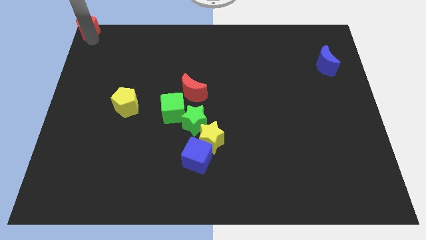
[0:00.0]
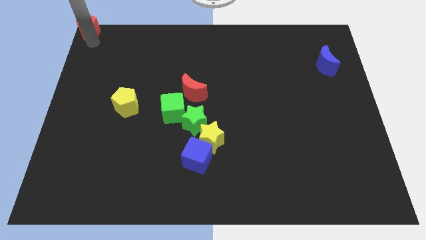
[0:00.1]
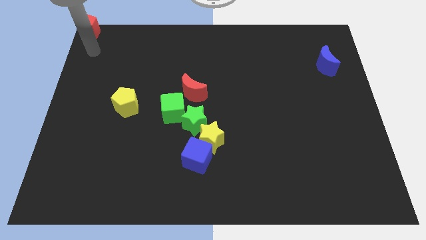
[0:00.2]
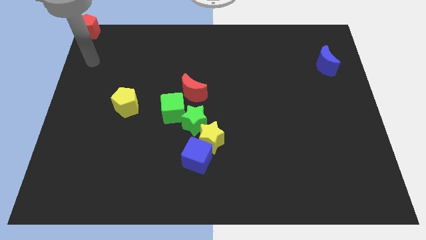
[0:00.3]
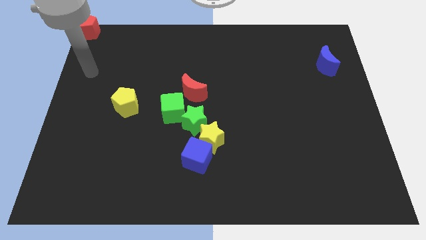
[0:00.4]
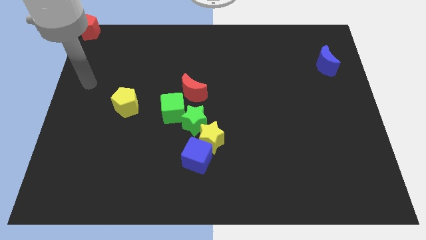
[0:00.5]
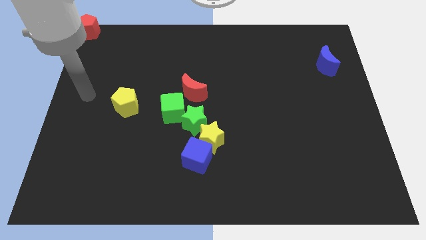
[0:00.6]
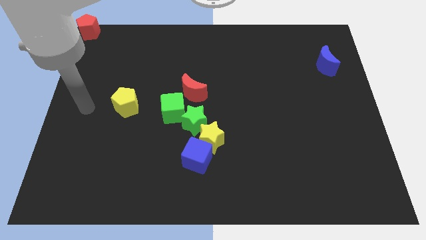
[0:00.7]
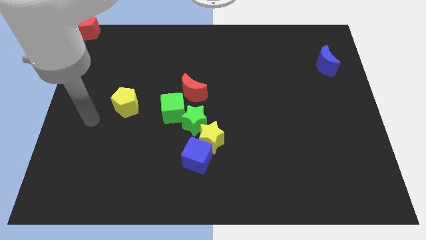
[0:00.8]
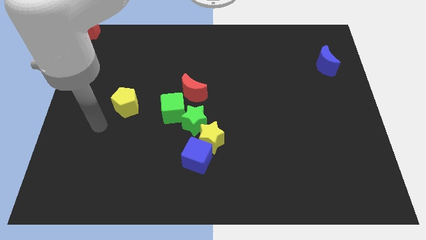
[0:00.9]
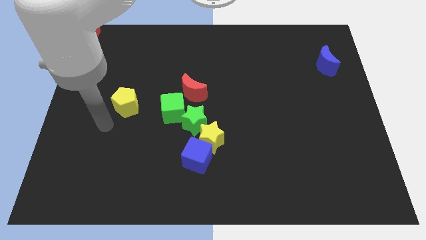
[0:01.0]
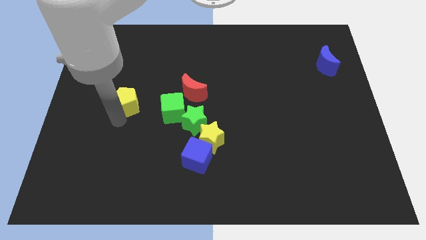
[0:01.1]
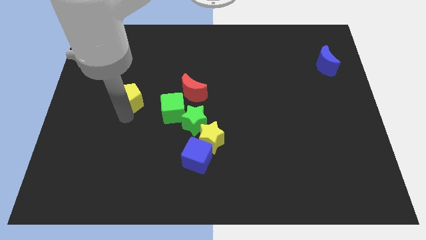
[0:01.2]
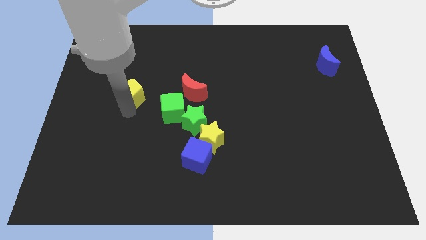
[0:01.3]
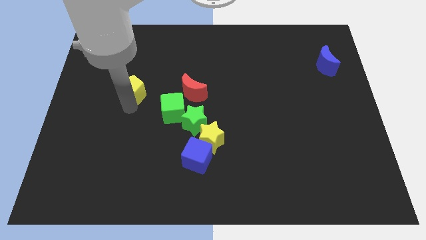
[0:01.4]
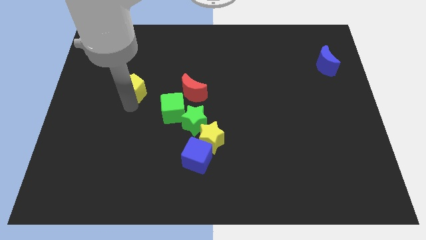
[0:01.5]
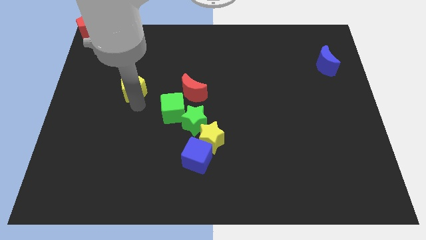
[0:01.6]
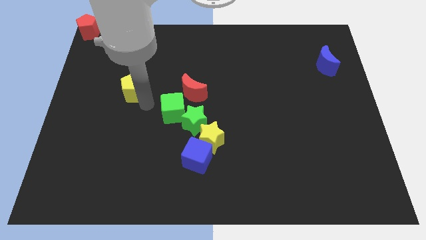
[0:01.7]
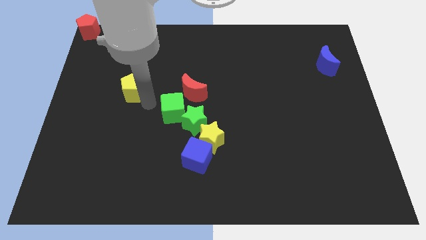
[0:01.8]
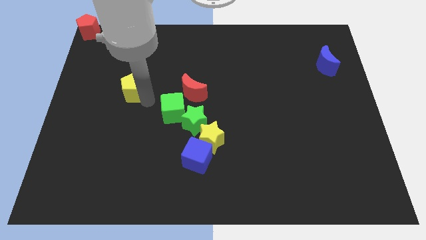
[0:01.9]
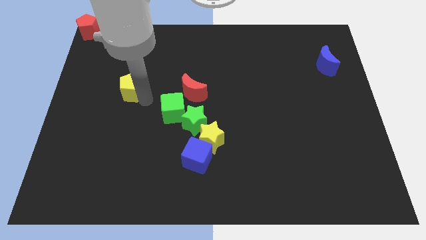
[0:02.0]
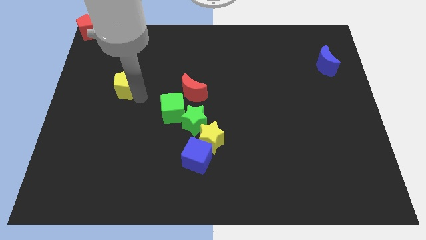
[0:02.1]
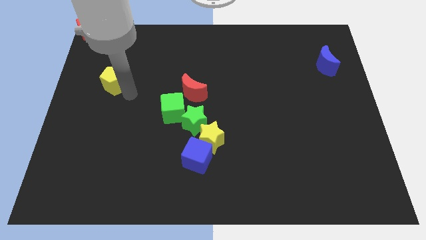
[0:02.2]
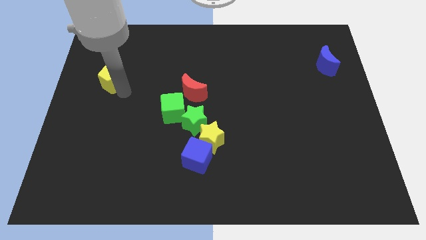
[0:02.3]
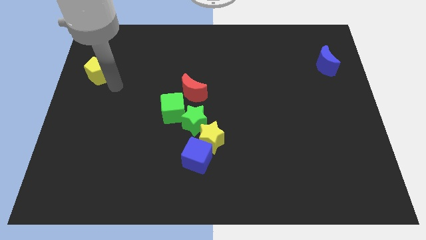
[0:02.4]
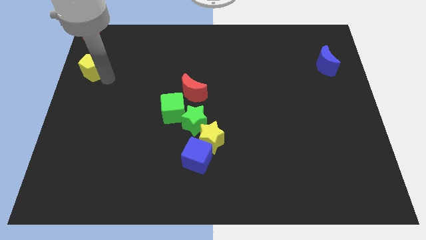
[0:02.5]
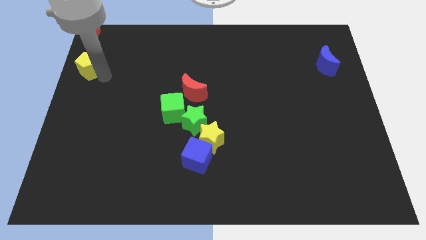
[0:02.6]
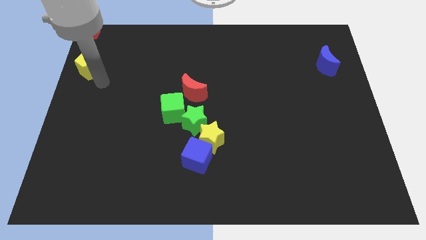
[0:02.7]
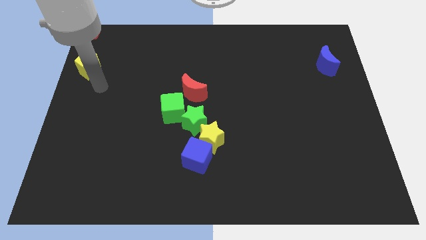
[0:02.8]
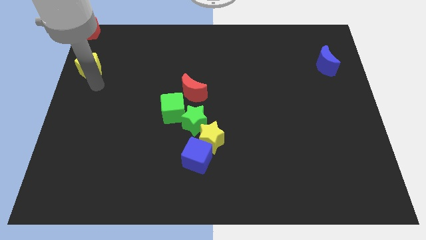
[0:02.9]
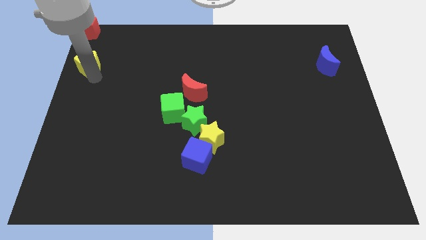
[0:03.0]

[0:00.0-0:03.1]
move the yellow pentagon towards the red pentagon

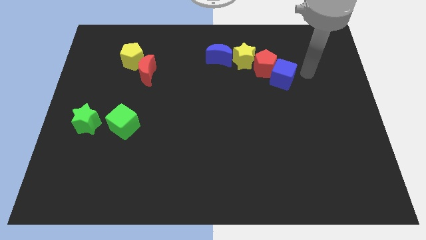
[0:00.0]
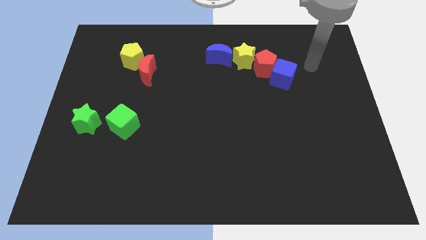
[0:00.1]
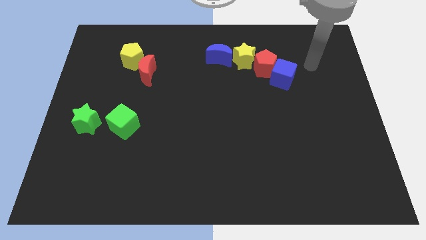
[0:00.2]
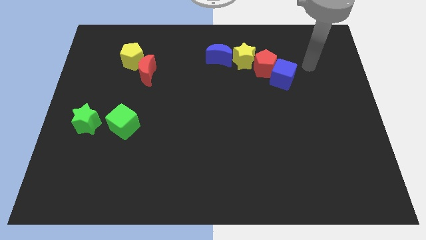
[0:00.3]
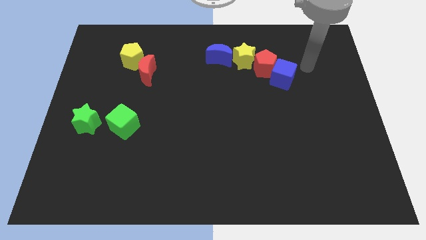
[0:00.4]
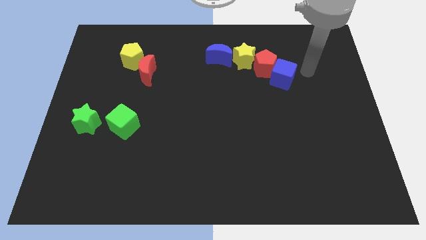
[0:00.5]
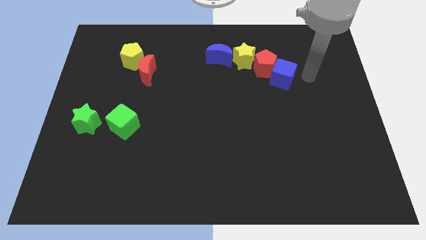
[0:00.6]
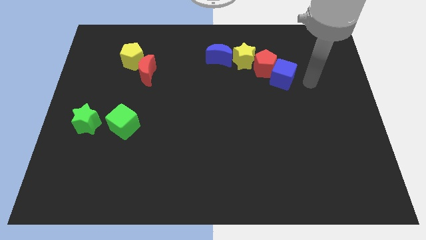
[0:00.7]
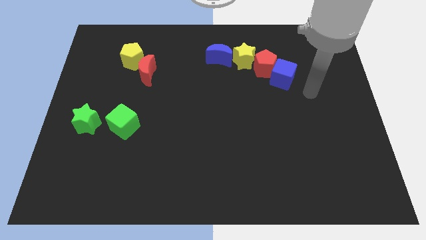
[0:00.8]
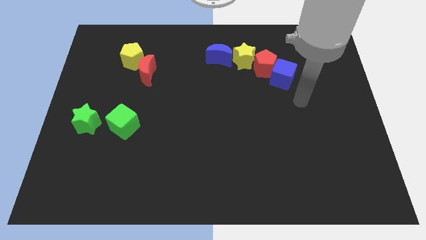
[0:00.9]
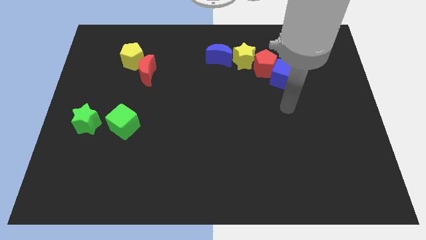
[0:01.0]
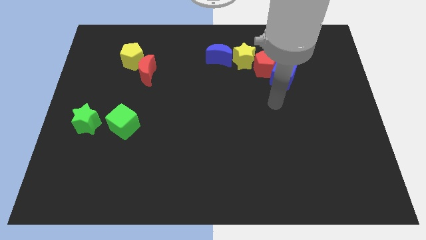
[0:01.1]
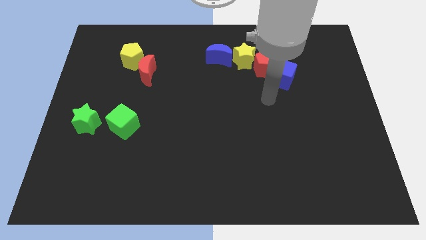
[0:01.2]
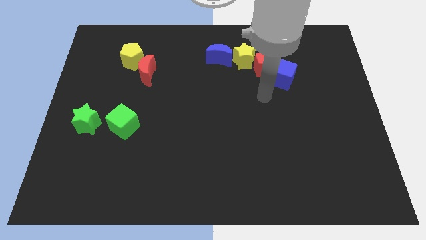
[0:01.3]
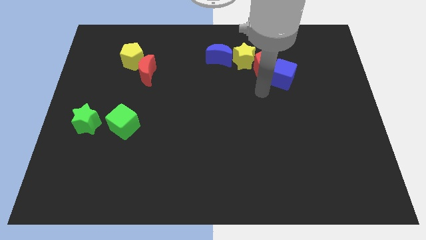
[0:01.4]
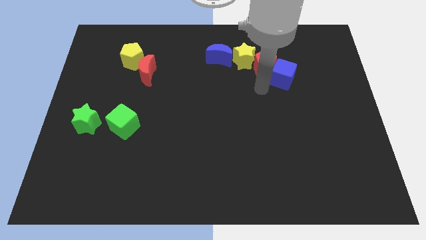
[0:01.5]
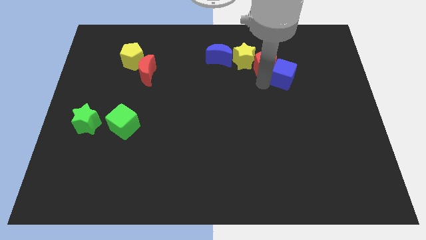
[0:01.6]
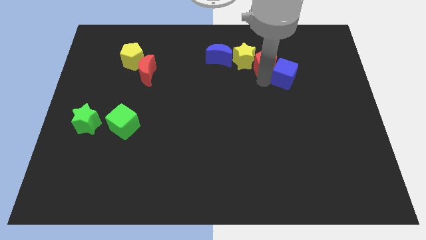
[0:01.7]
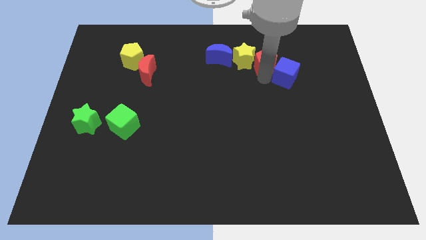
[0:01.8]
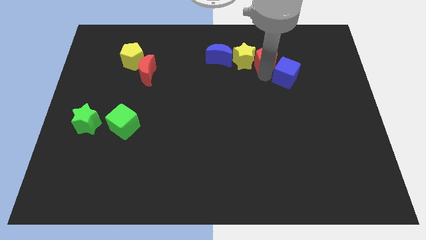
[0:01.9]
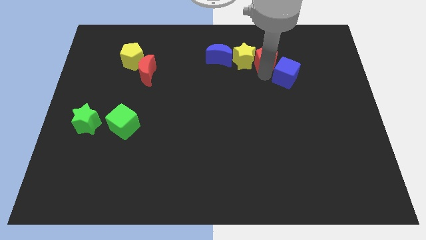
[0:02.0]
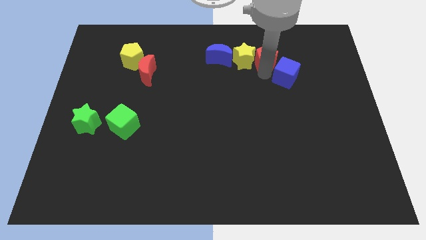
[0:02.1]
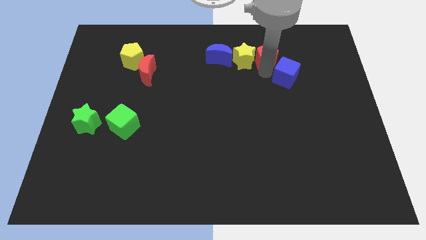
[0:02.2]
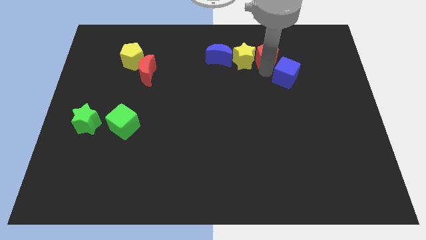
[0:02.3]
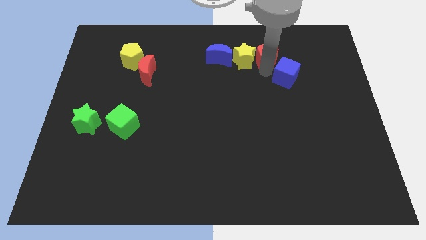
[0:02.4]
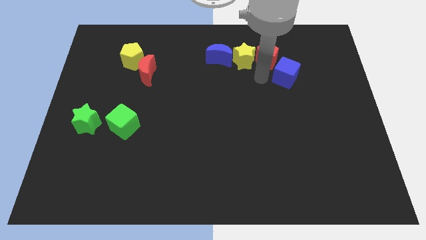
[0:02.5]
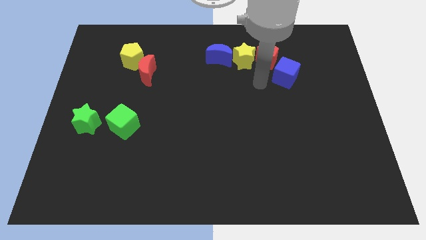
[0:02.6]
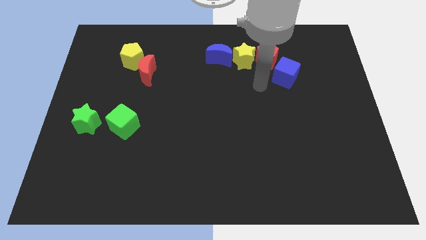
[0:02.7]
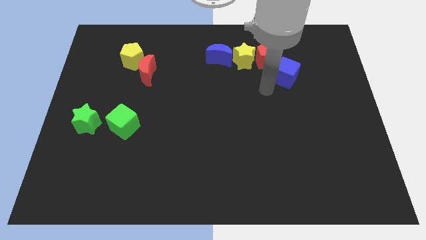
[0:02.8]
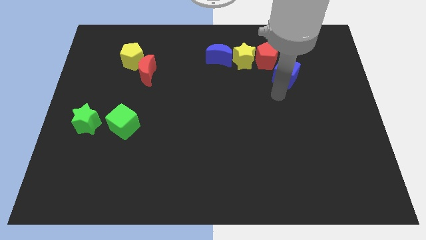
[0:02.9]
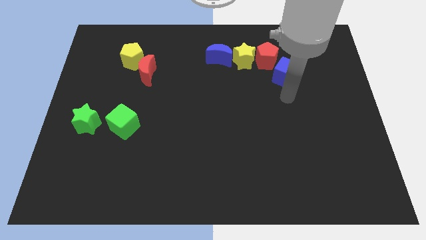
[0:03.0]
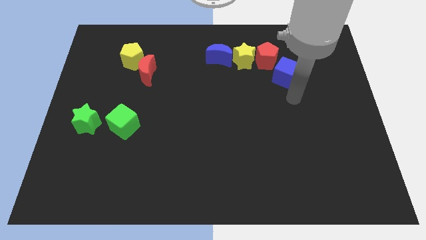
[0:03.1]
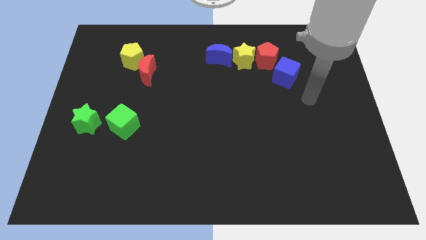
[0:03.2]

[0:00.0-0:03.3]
place the red pentagon to the right side of the yellow star

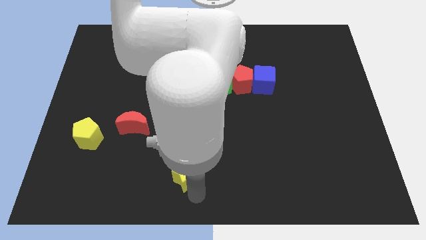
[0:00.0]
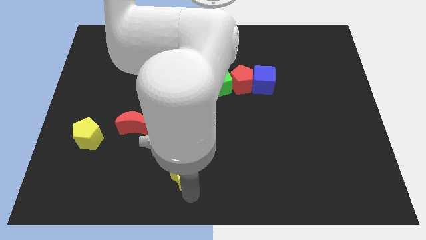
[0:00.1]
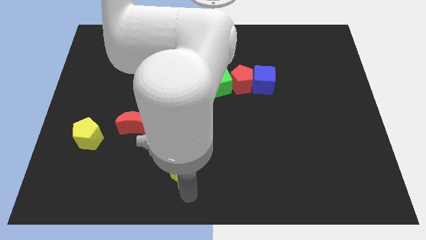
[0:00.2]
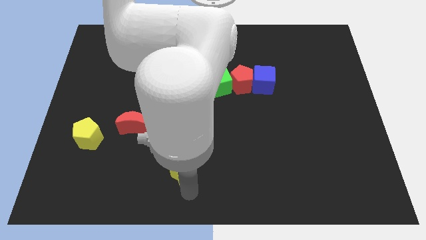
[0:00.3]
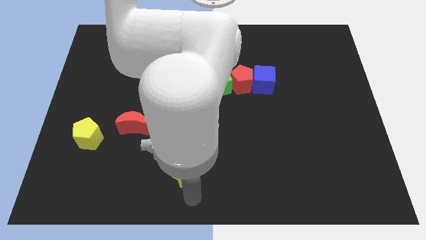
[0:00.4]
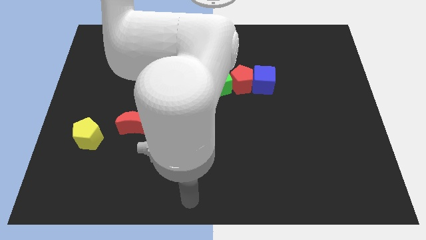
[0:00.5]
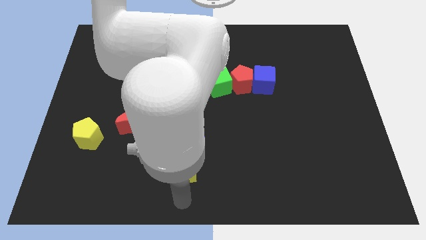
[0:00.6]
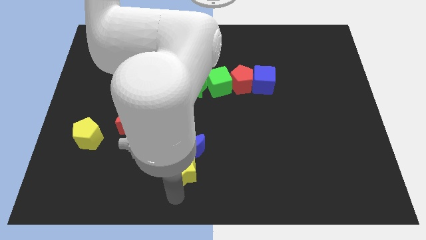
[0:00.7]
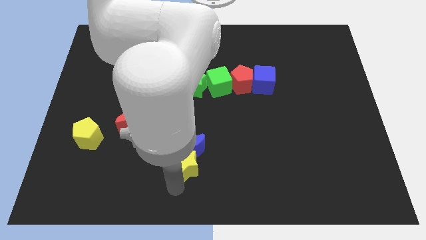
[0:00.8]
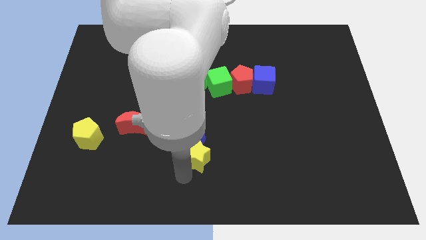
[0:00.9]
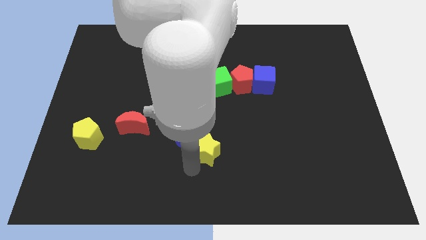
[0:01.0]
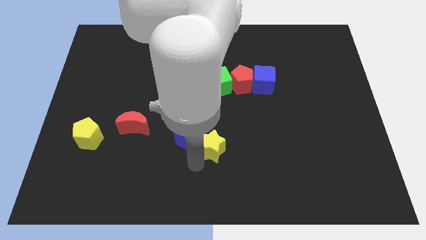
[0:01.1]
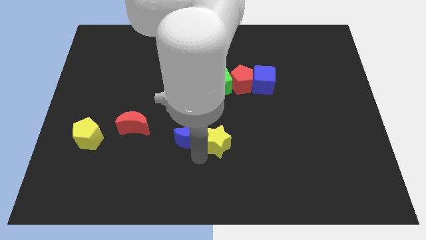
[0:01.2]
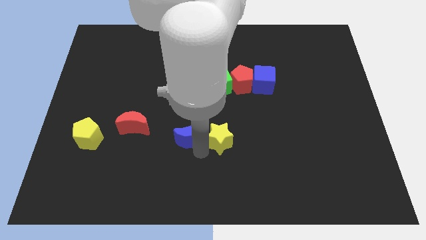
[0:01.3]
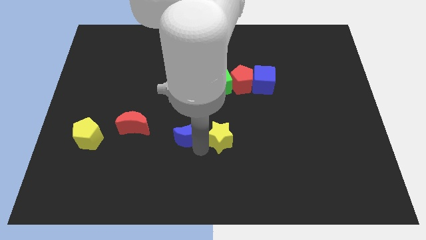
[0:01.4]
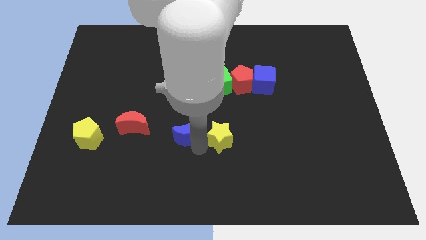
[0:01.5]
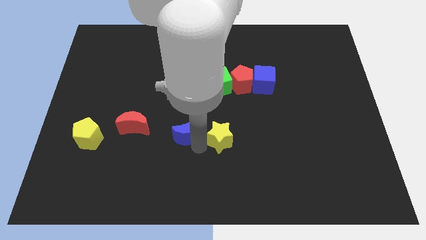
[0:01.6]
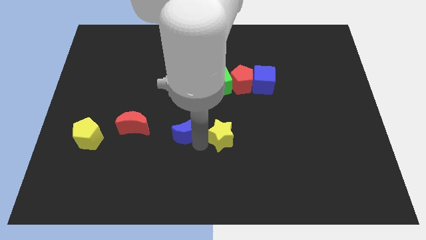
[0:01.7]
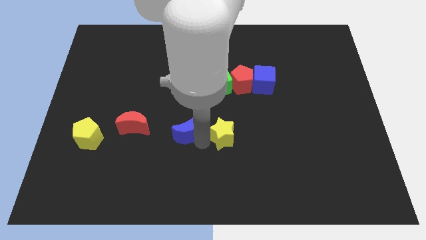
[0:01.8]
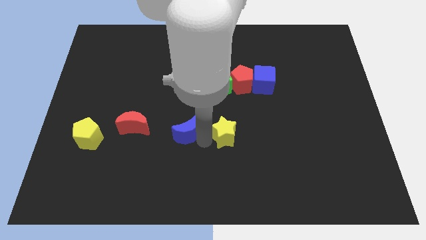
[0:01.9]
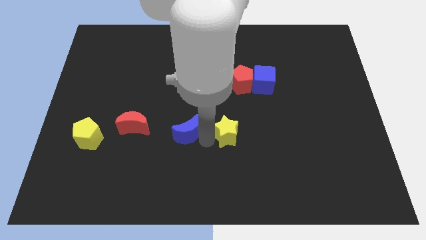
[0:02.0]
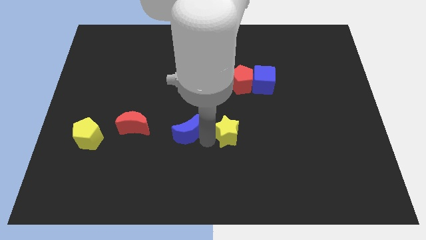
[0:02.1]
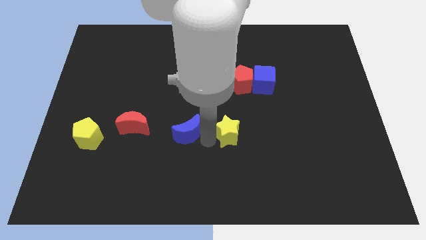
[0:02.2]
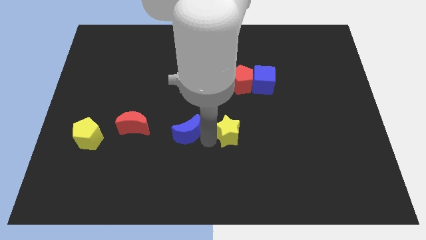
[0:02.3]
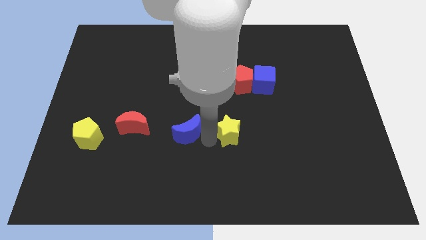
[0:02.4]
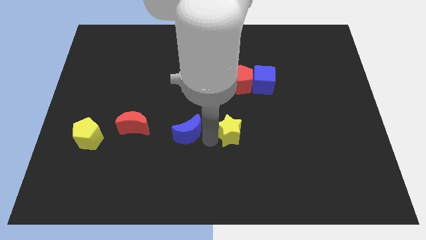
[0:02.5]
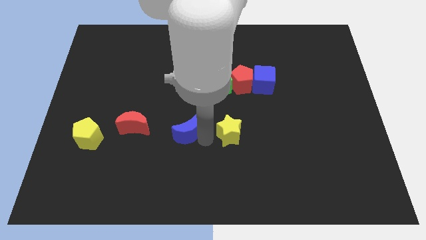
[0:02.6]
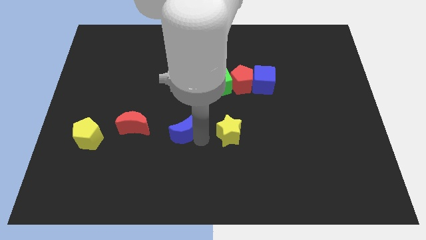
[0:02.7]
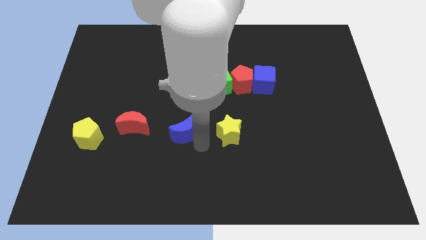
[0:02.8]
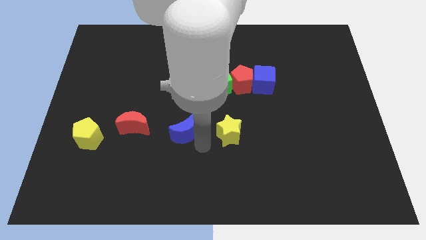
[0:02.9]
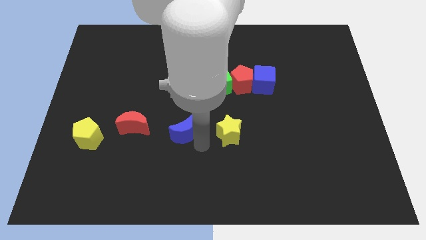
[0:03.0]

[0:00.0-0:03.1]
separate yellow star and blue moon
